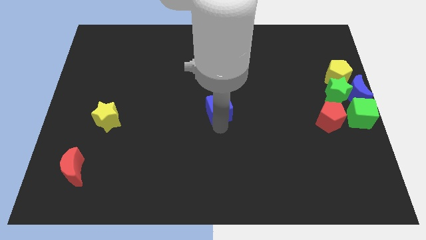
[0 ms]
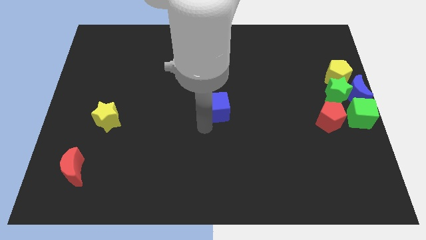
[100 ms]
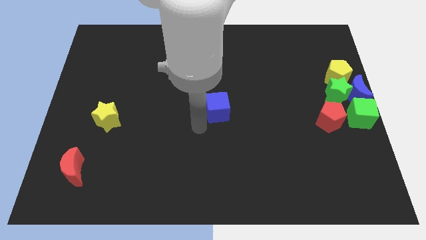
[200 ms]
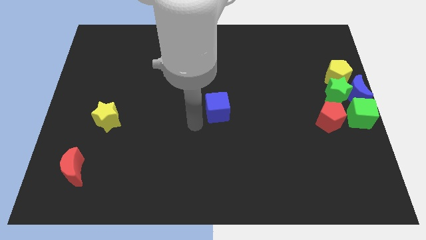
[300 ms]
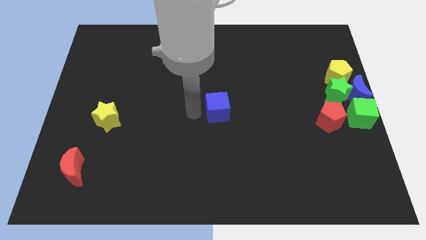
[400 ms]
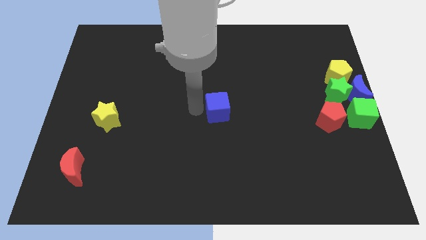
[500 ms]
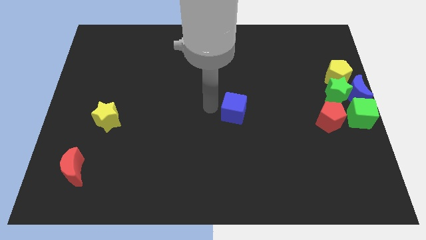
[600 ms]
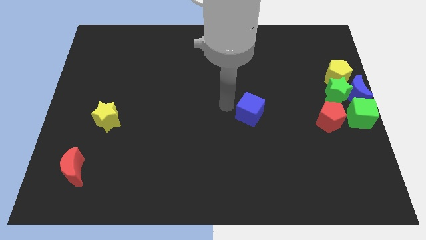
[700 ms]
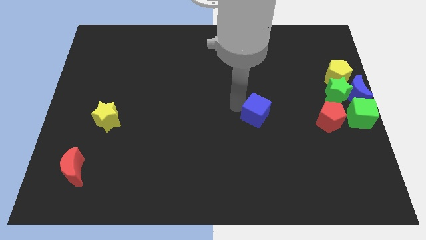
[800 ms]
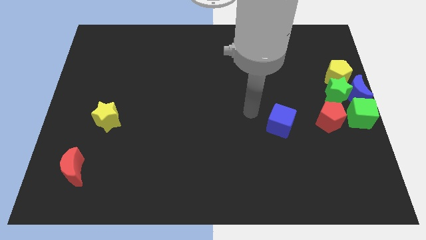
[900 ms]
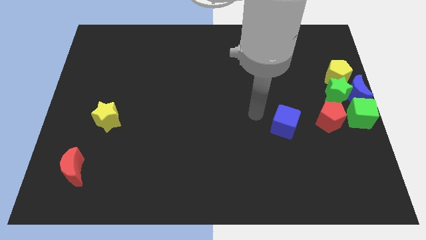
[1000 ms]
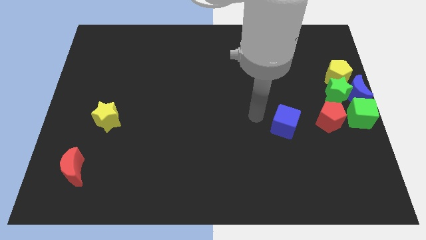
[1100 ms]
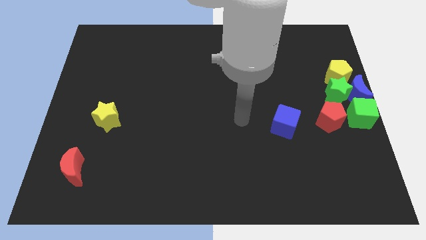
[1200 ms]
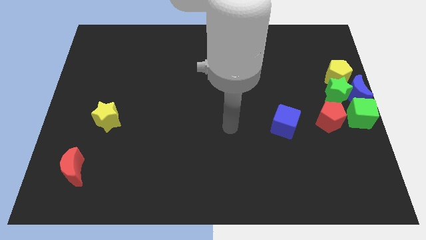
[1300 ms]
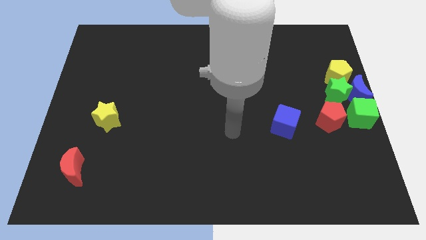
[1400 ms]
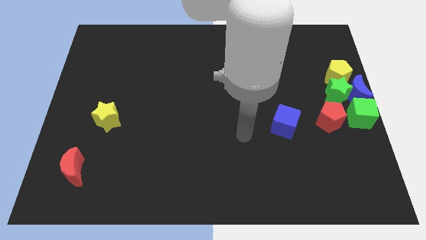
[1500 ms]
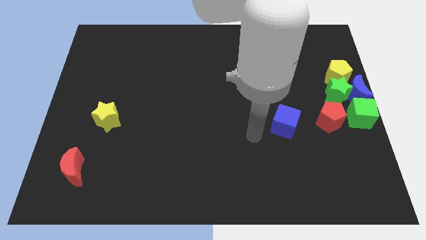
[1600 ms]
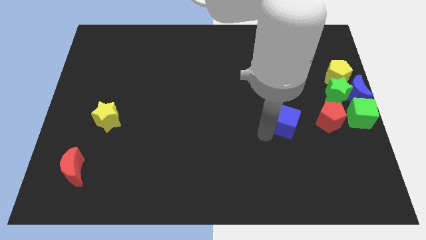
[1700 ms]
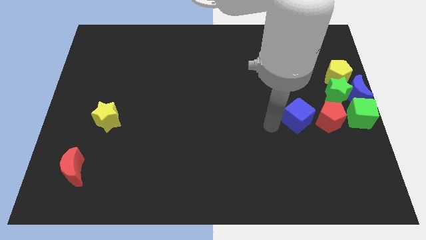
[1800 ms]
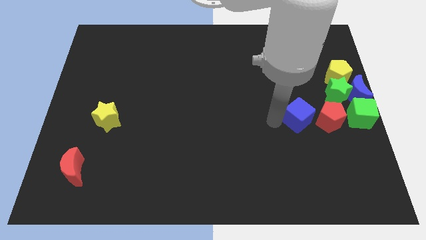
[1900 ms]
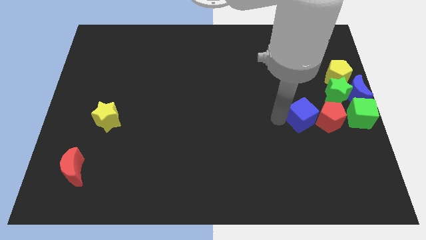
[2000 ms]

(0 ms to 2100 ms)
place the blue cube to the left of the red pentagon

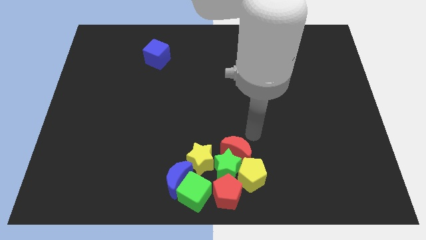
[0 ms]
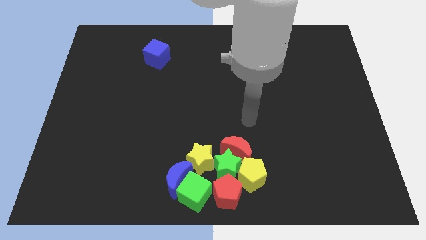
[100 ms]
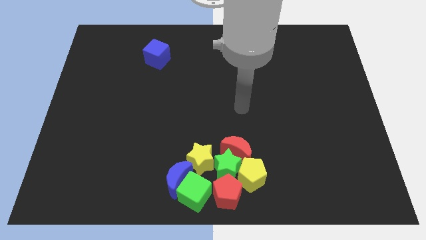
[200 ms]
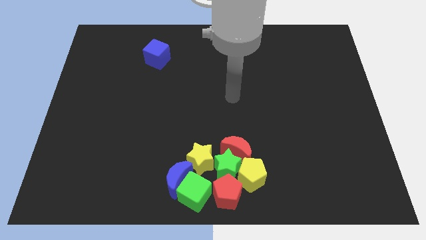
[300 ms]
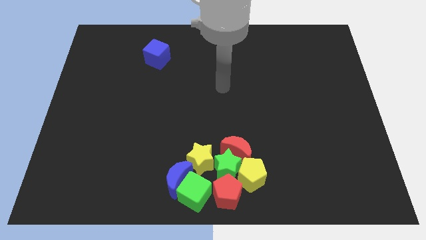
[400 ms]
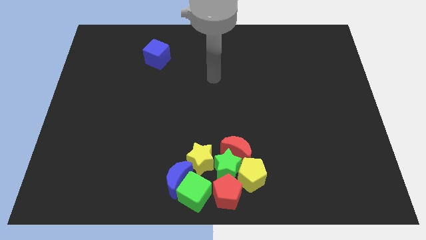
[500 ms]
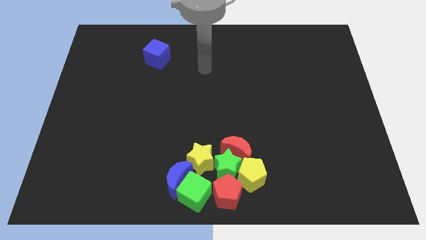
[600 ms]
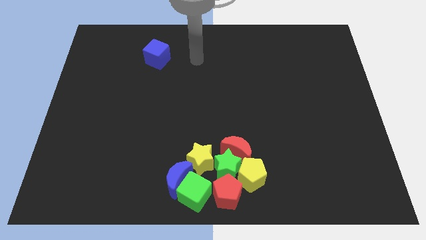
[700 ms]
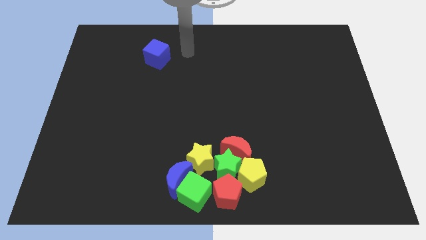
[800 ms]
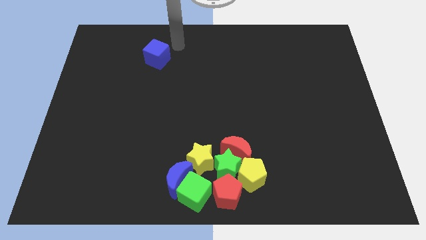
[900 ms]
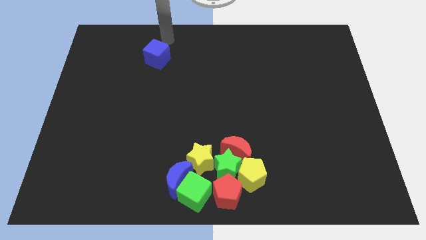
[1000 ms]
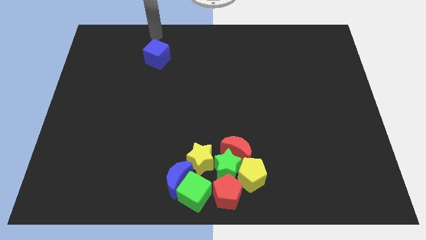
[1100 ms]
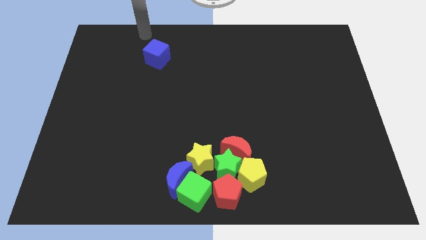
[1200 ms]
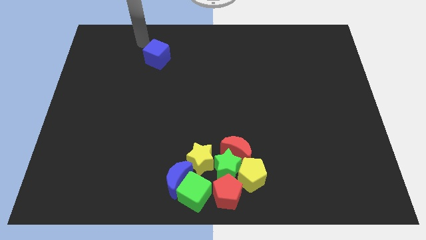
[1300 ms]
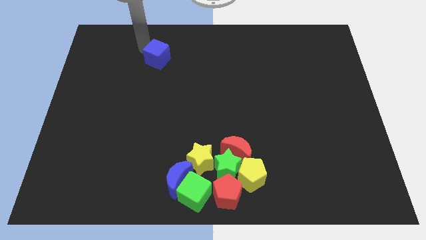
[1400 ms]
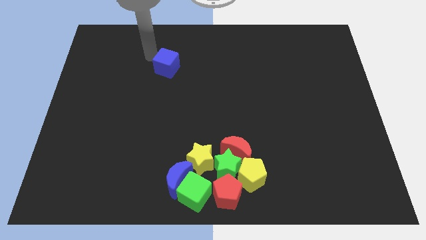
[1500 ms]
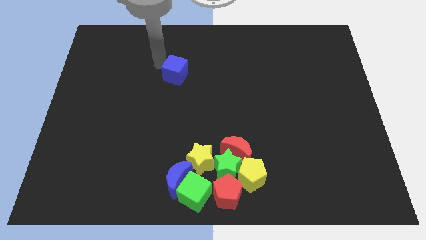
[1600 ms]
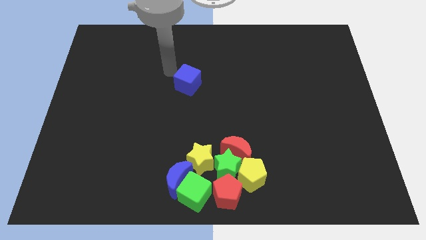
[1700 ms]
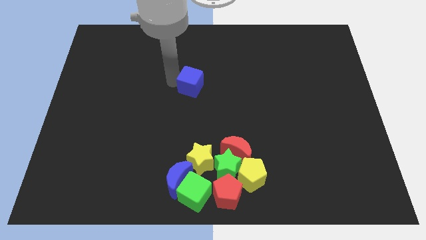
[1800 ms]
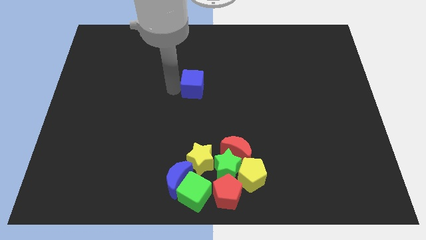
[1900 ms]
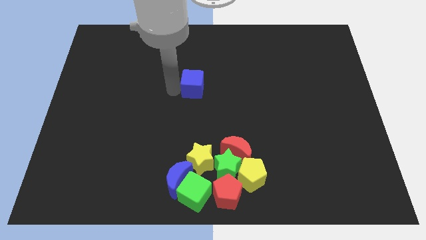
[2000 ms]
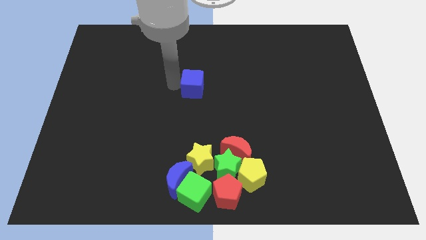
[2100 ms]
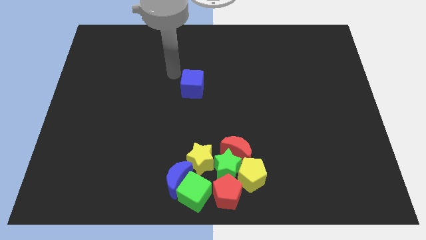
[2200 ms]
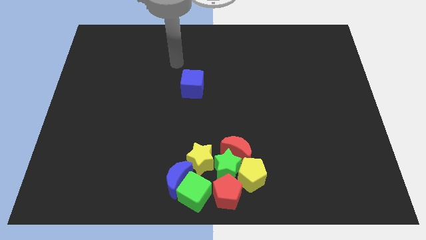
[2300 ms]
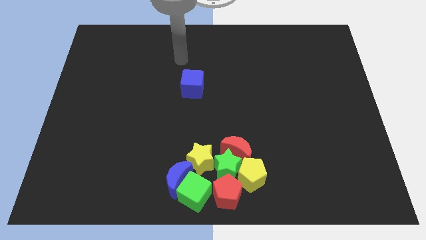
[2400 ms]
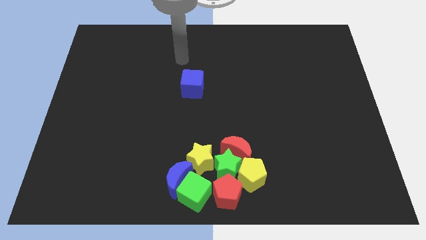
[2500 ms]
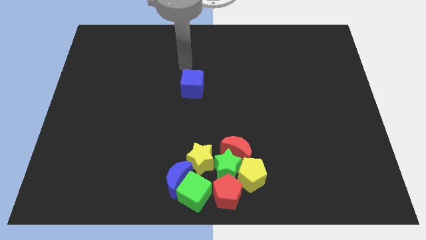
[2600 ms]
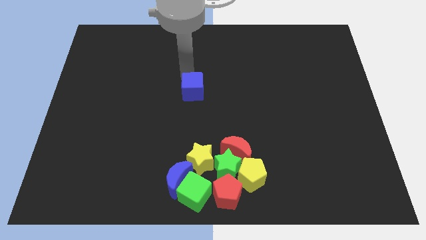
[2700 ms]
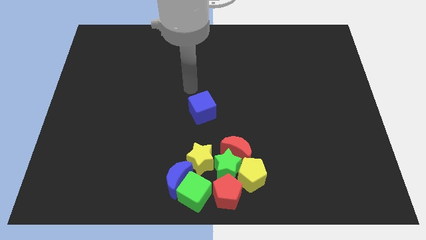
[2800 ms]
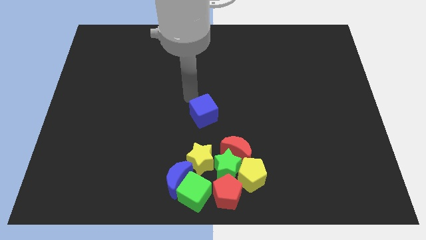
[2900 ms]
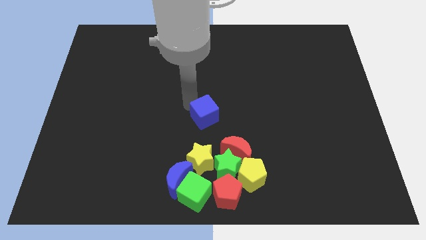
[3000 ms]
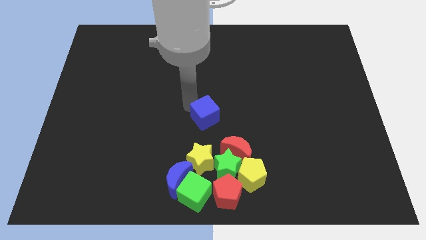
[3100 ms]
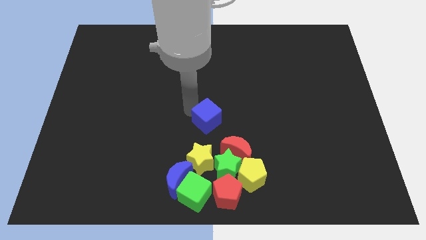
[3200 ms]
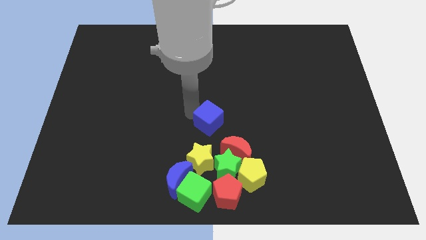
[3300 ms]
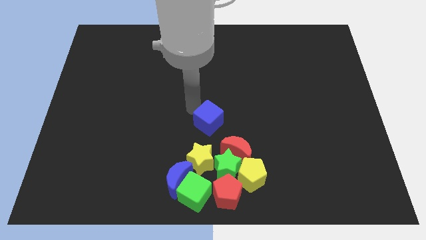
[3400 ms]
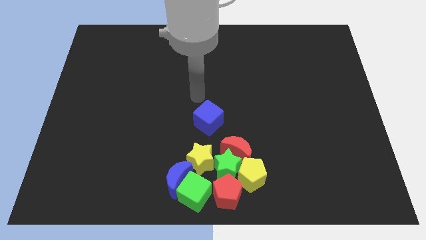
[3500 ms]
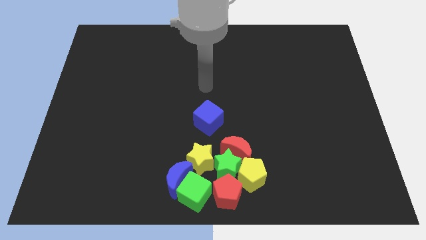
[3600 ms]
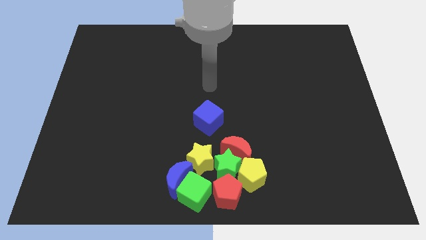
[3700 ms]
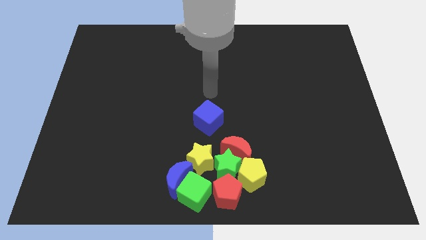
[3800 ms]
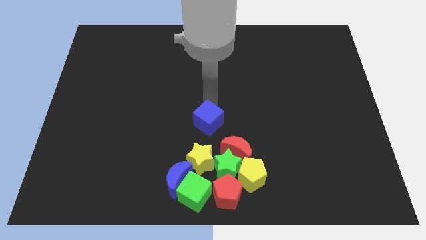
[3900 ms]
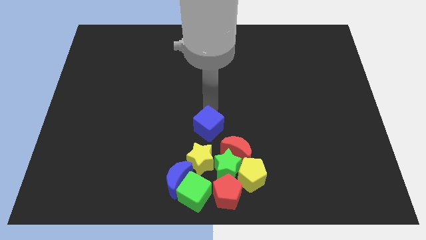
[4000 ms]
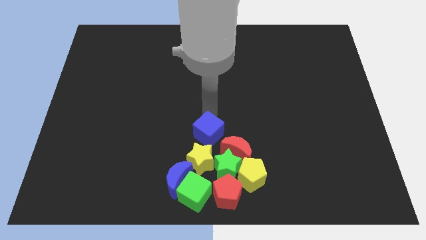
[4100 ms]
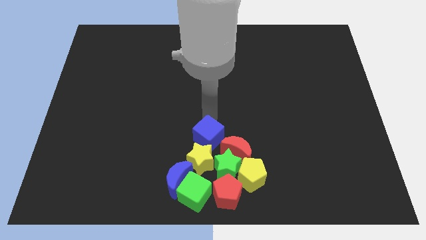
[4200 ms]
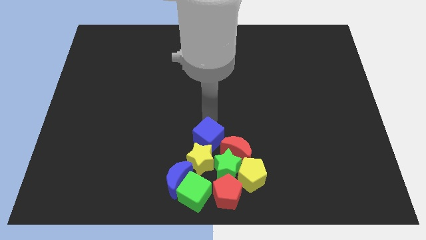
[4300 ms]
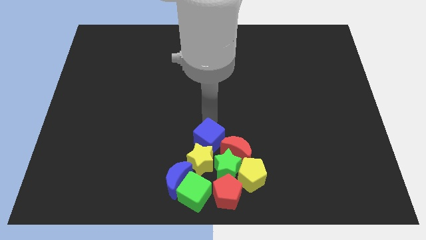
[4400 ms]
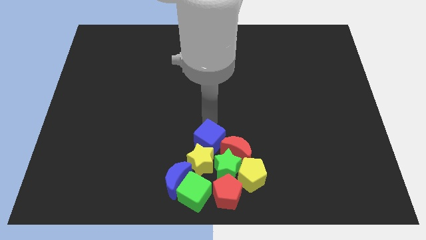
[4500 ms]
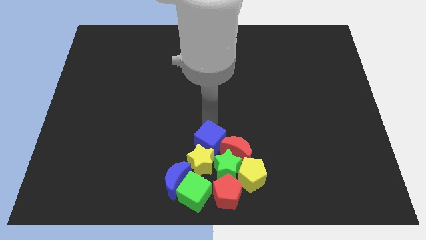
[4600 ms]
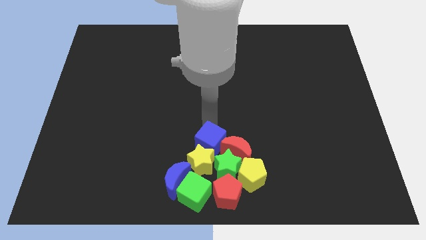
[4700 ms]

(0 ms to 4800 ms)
move the blue cube into the group of blocks

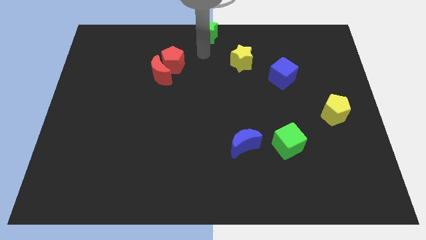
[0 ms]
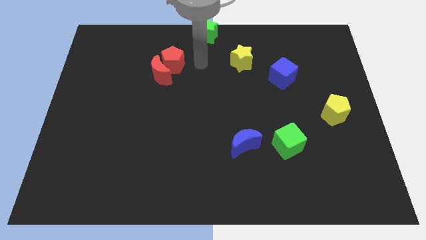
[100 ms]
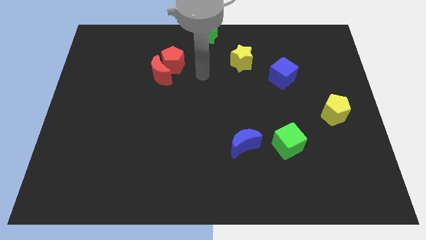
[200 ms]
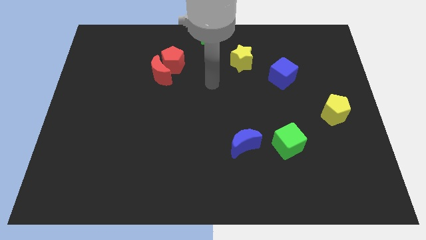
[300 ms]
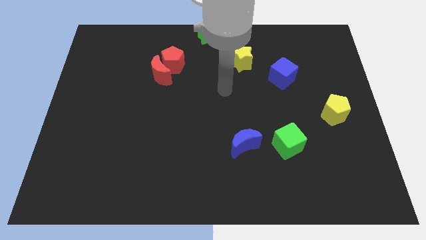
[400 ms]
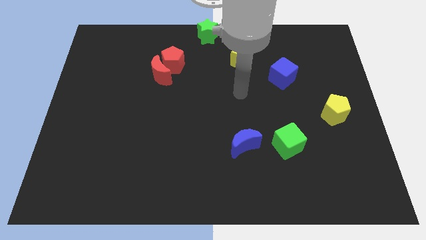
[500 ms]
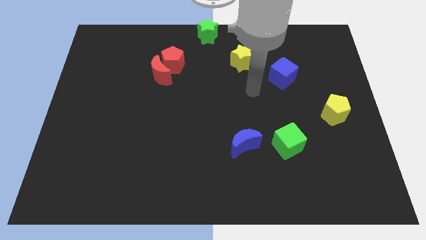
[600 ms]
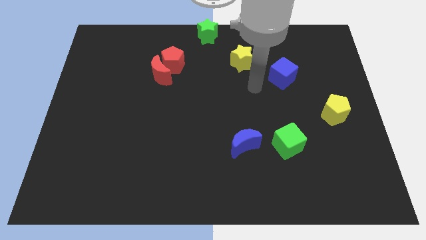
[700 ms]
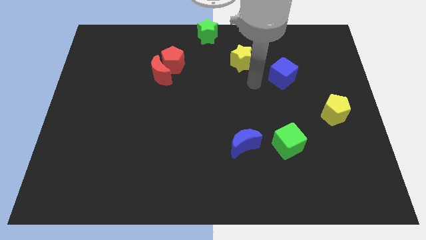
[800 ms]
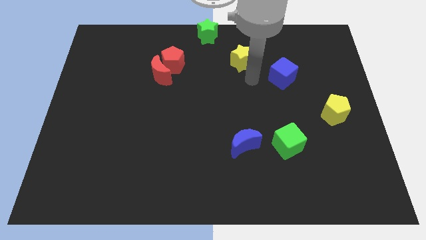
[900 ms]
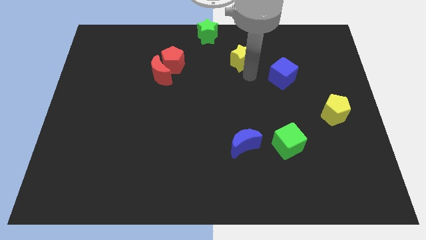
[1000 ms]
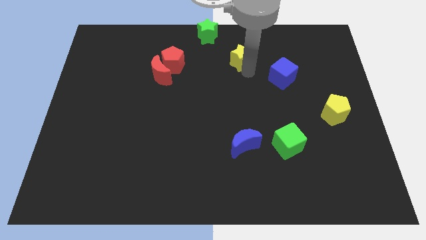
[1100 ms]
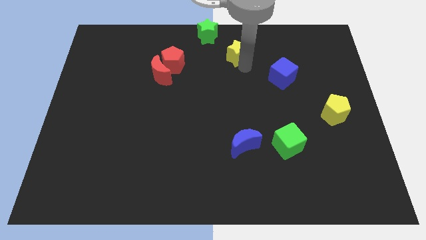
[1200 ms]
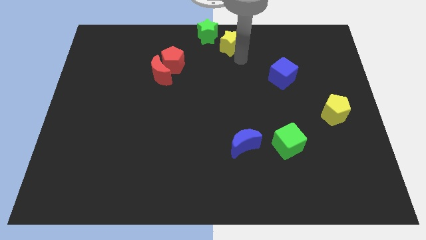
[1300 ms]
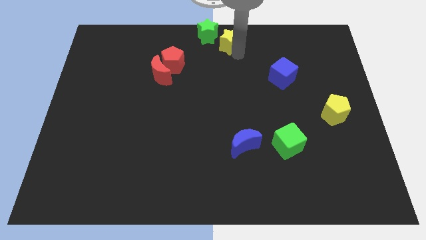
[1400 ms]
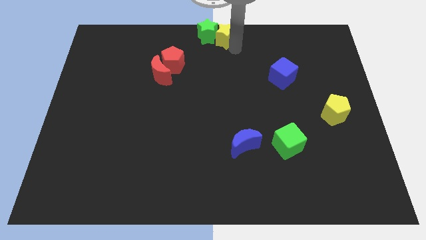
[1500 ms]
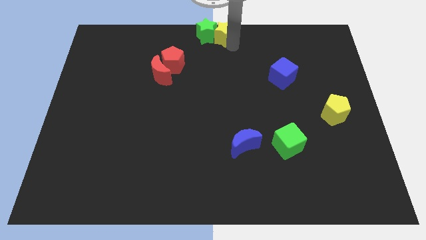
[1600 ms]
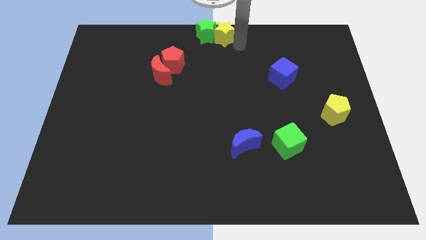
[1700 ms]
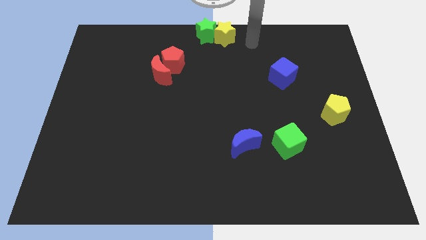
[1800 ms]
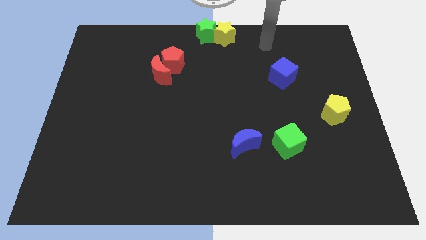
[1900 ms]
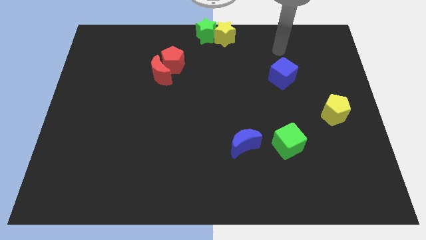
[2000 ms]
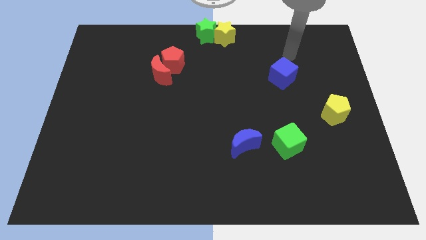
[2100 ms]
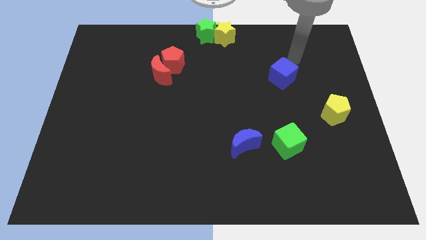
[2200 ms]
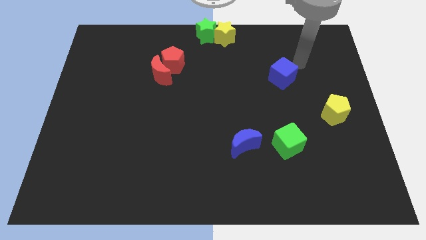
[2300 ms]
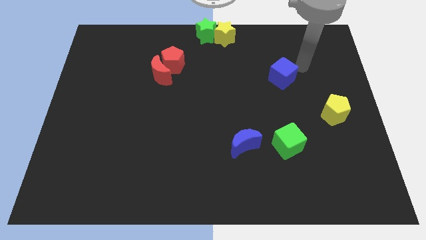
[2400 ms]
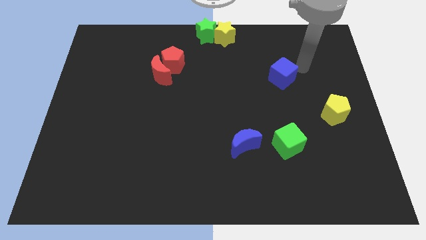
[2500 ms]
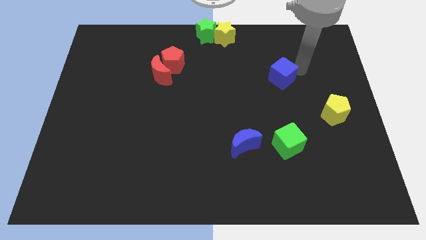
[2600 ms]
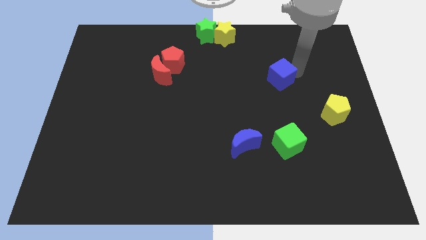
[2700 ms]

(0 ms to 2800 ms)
move the yellow star to the right side of green star
